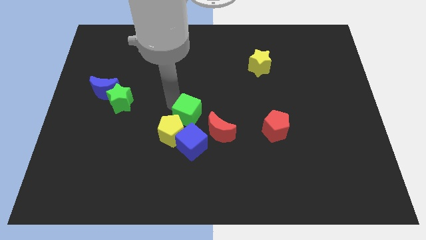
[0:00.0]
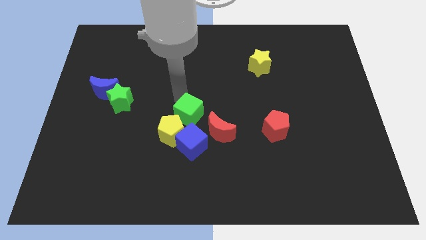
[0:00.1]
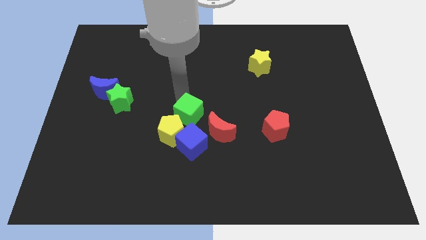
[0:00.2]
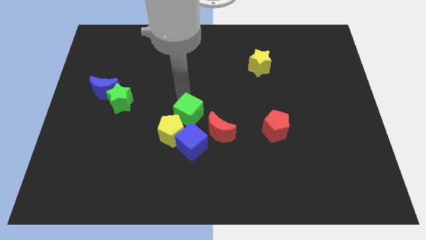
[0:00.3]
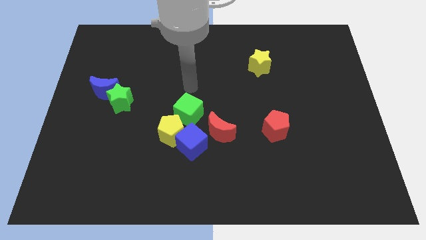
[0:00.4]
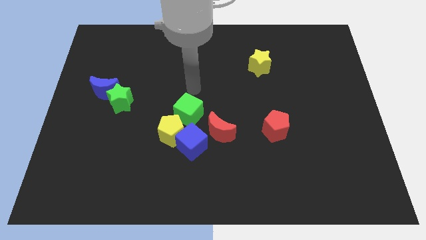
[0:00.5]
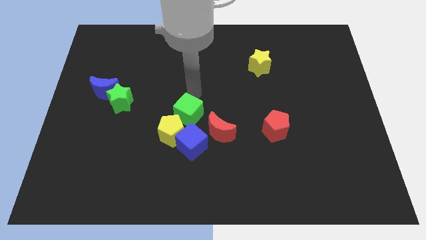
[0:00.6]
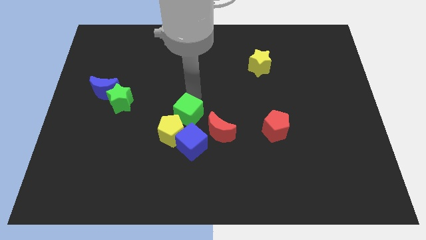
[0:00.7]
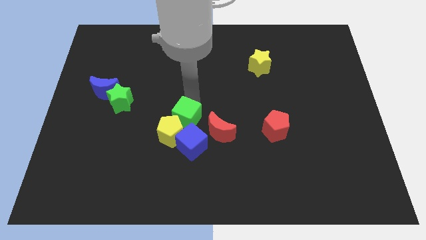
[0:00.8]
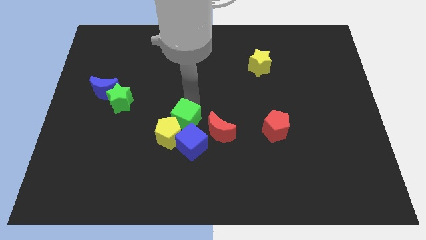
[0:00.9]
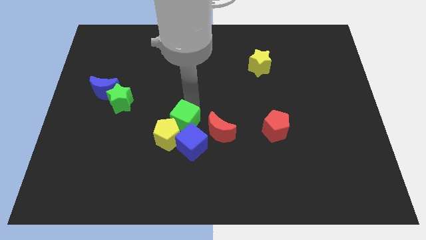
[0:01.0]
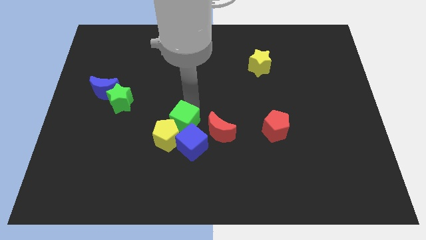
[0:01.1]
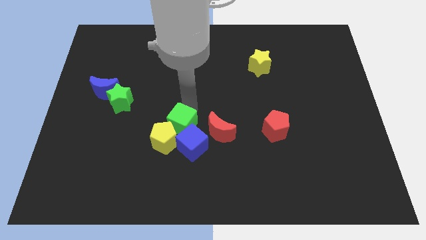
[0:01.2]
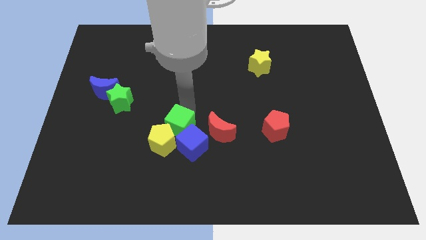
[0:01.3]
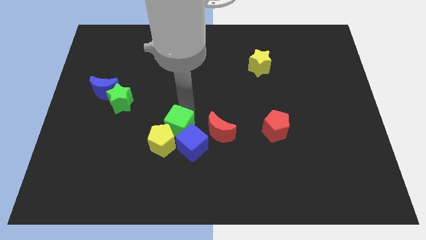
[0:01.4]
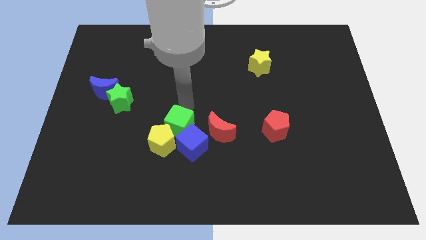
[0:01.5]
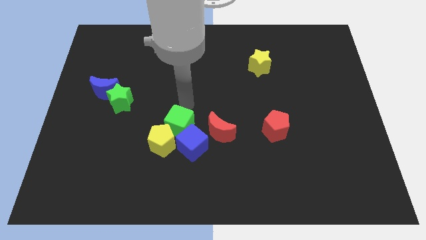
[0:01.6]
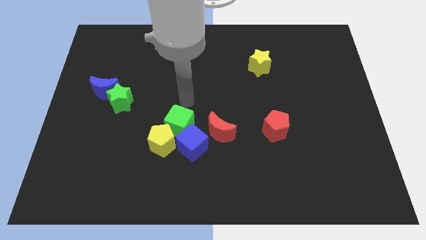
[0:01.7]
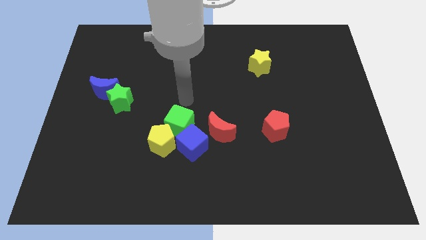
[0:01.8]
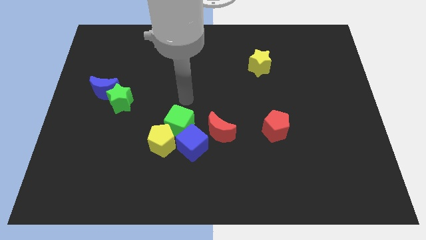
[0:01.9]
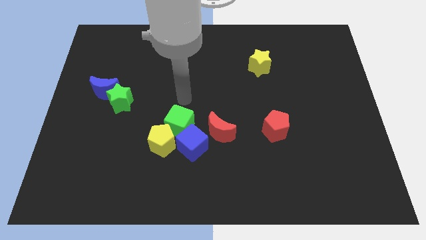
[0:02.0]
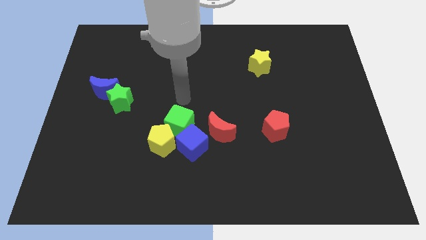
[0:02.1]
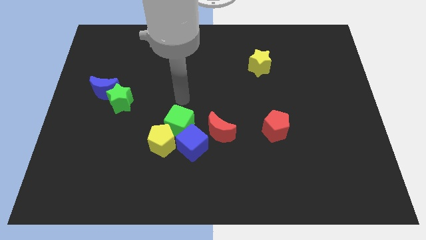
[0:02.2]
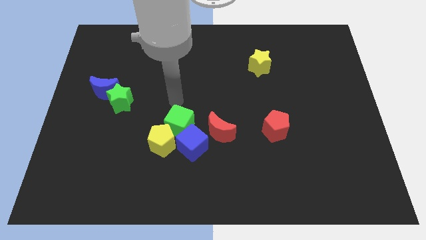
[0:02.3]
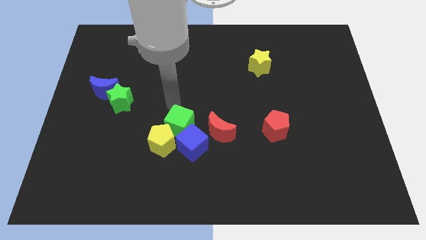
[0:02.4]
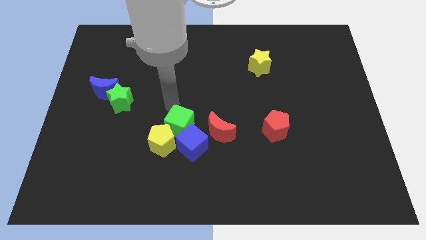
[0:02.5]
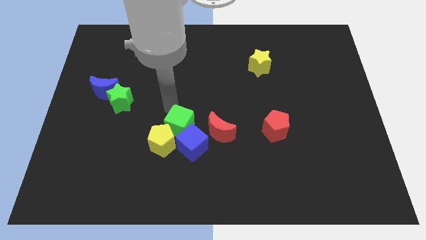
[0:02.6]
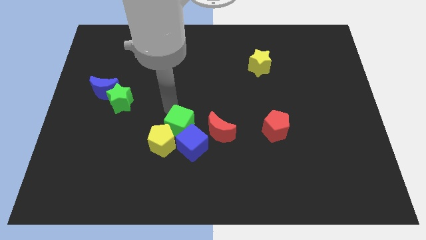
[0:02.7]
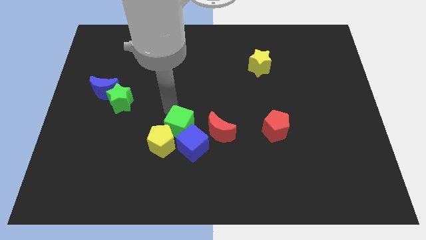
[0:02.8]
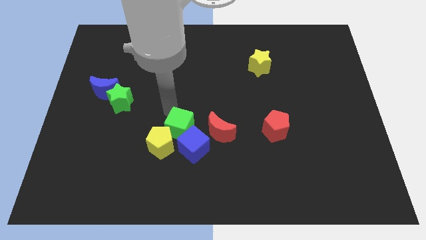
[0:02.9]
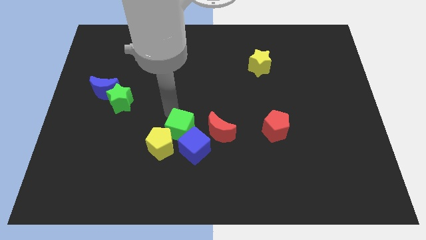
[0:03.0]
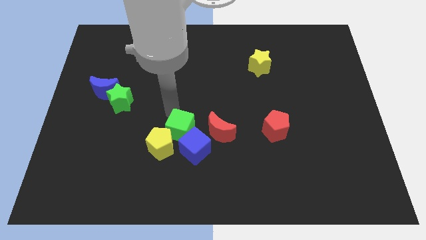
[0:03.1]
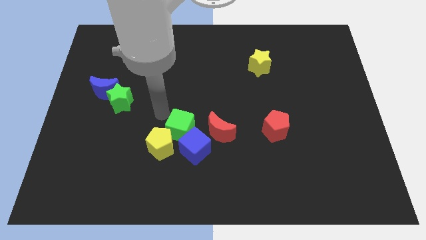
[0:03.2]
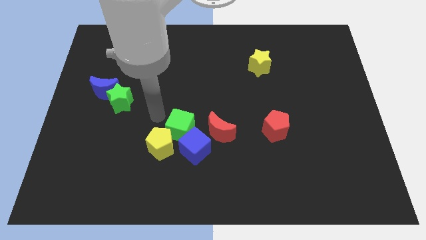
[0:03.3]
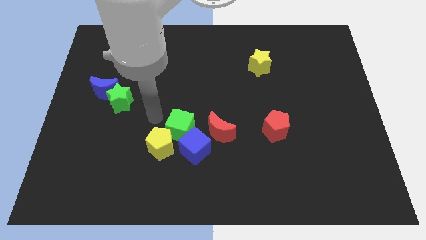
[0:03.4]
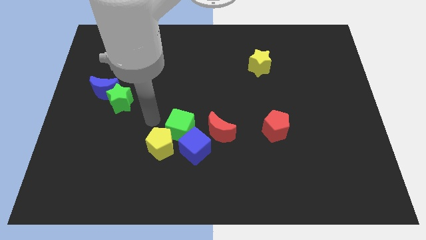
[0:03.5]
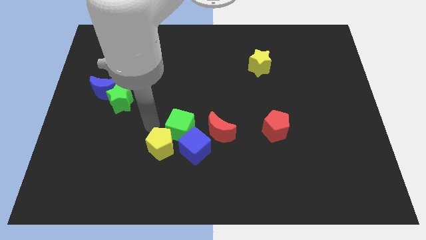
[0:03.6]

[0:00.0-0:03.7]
point your arm above yellow pentagon

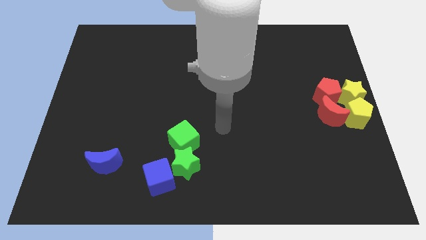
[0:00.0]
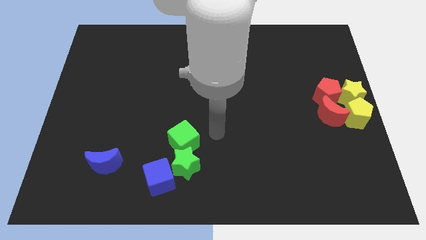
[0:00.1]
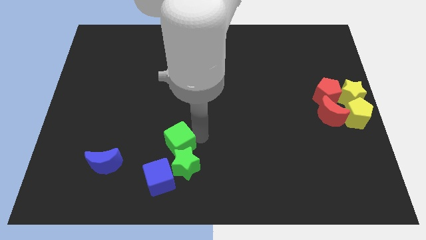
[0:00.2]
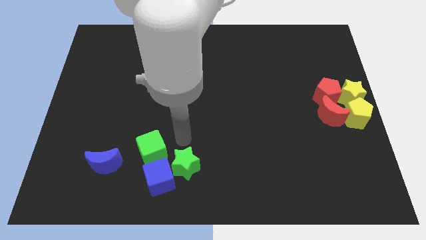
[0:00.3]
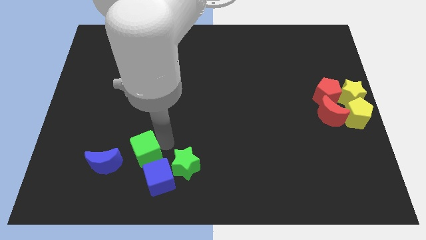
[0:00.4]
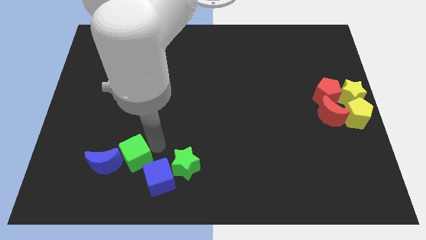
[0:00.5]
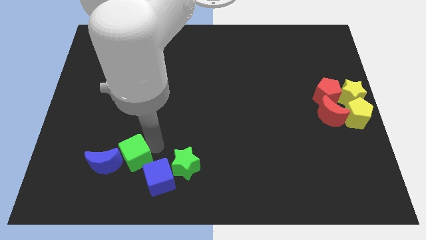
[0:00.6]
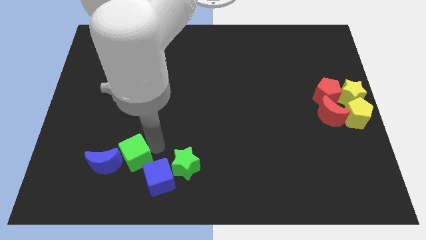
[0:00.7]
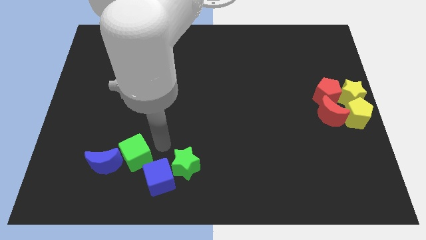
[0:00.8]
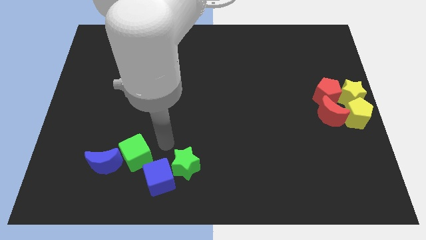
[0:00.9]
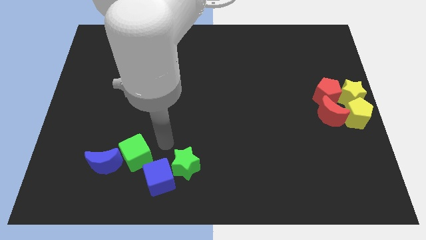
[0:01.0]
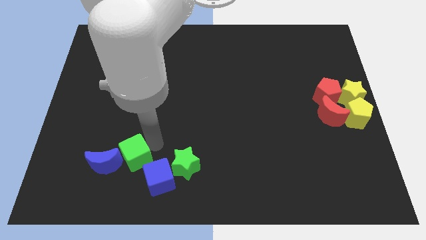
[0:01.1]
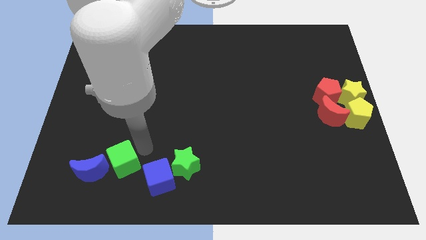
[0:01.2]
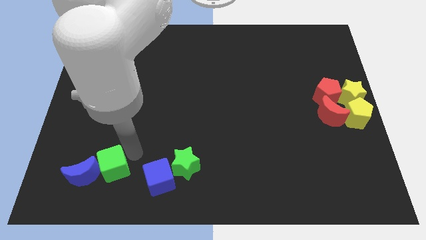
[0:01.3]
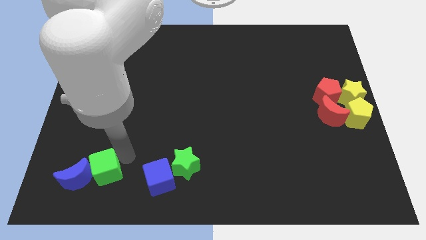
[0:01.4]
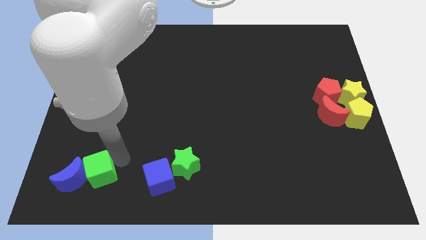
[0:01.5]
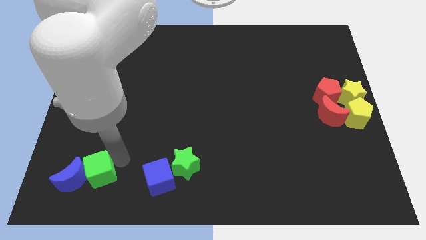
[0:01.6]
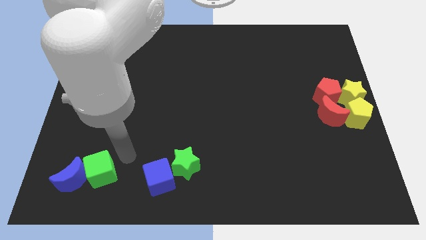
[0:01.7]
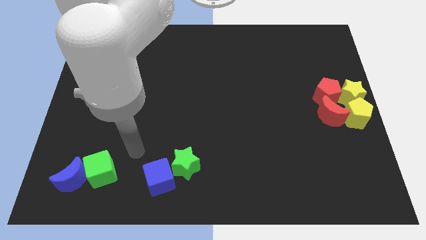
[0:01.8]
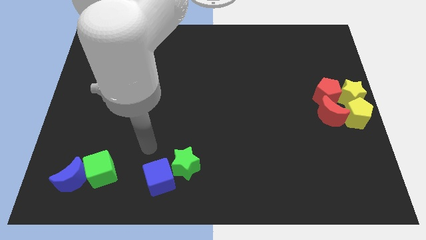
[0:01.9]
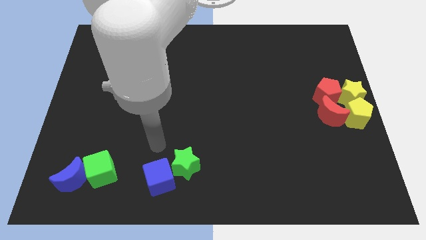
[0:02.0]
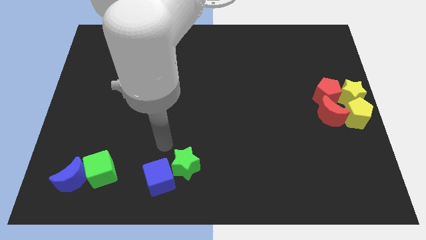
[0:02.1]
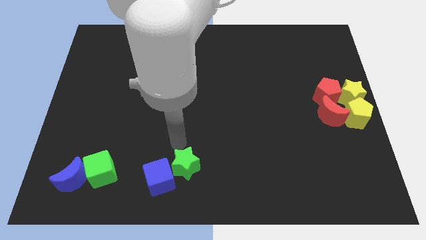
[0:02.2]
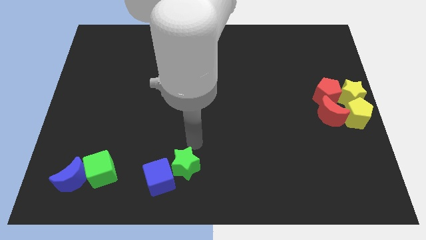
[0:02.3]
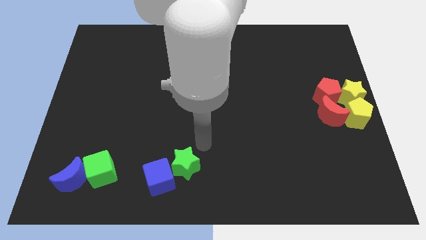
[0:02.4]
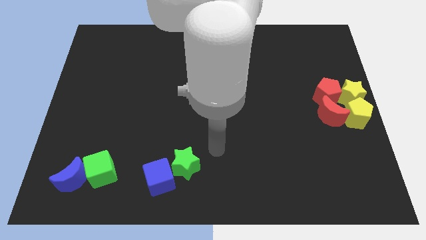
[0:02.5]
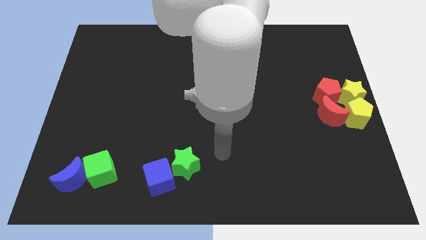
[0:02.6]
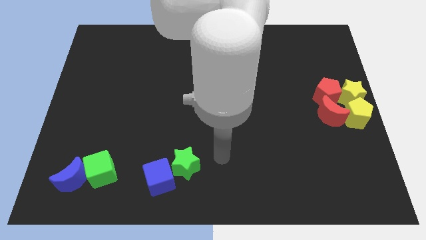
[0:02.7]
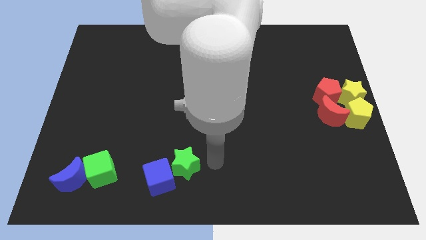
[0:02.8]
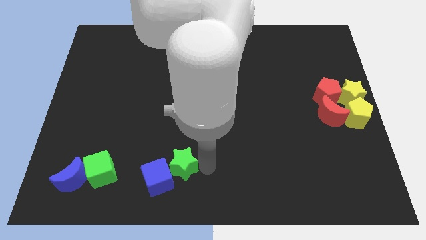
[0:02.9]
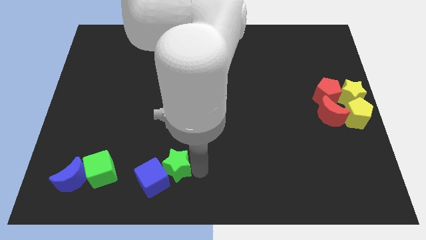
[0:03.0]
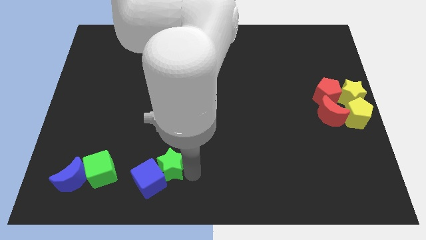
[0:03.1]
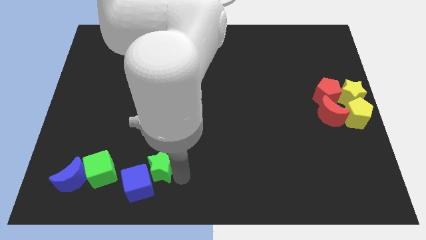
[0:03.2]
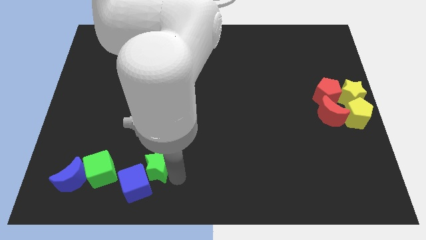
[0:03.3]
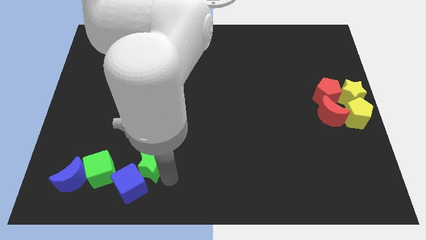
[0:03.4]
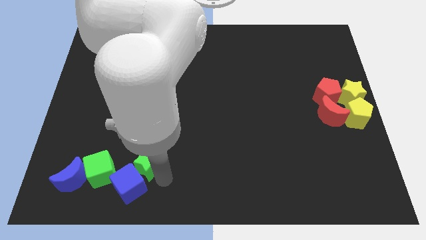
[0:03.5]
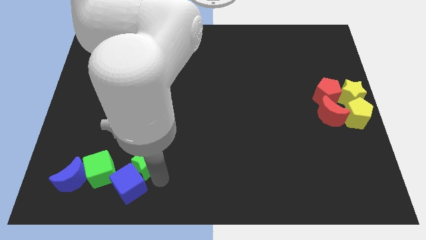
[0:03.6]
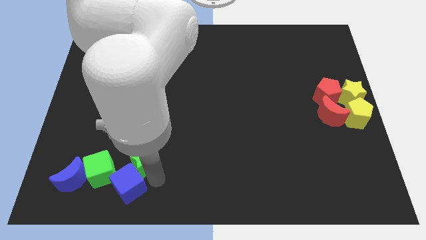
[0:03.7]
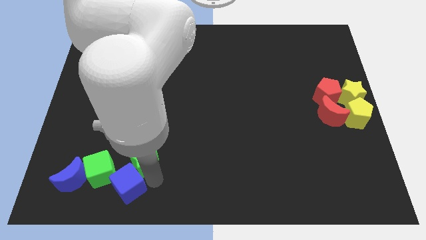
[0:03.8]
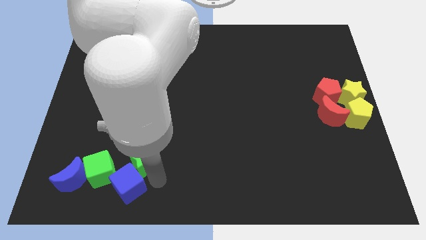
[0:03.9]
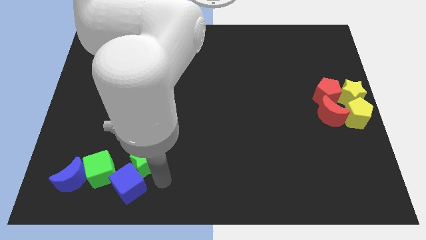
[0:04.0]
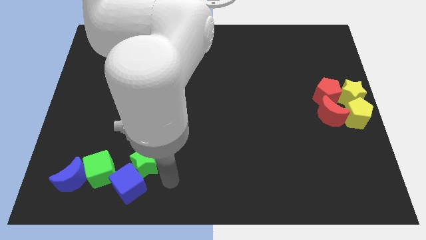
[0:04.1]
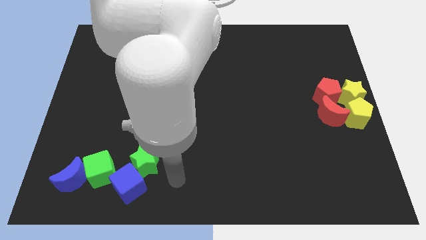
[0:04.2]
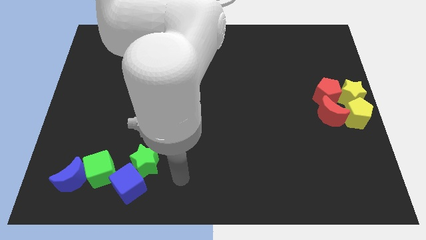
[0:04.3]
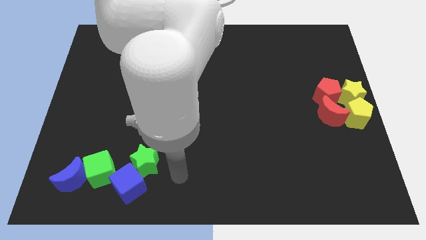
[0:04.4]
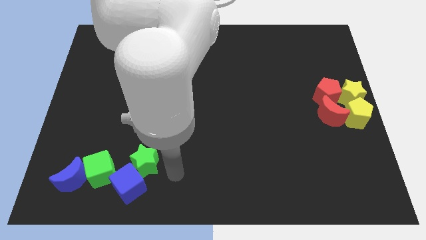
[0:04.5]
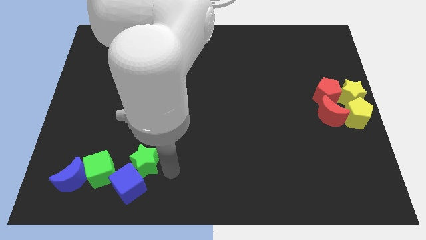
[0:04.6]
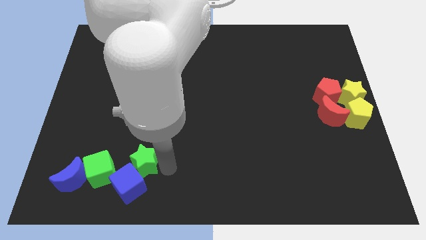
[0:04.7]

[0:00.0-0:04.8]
move green cube and blue moon to the bottom left

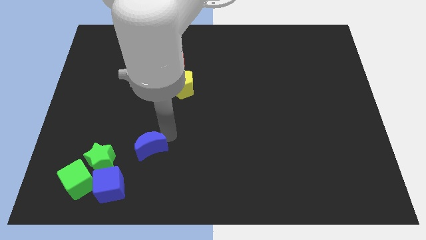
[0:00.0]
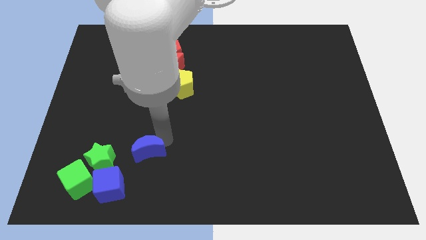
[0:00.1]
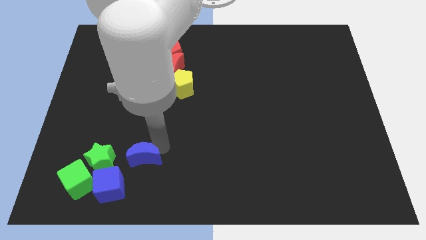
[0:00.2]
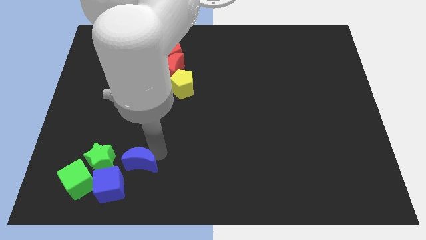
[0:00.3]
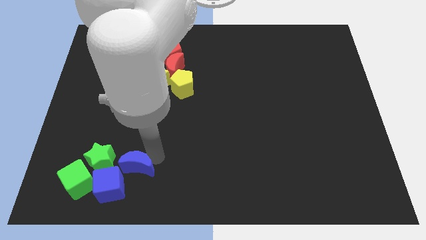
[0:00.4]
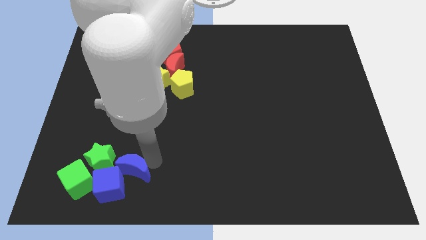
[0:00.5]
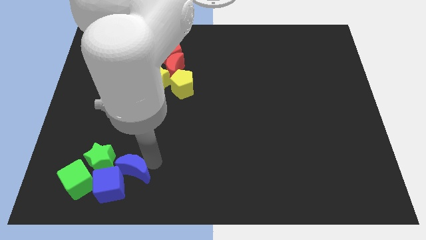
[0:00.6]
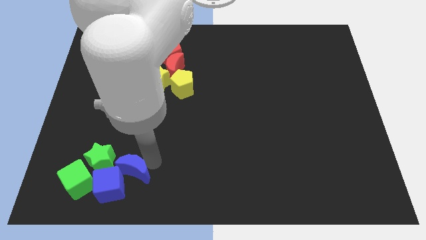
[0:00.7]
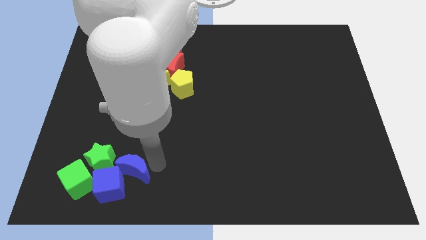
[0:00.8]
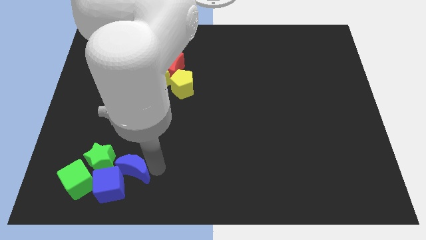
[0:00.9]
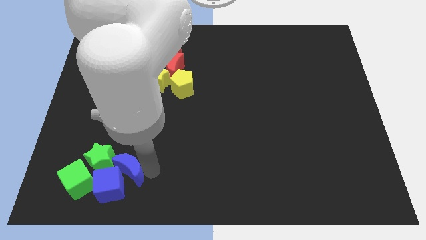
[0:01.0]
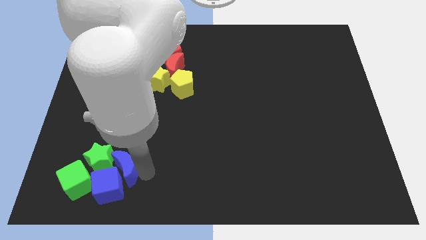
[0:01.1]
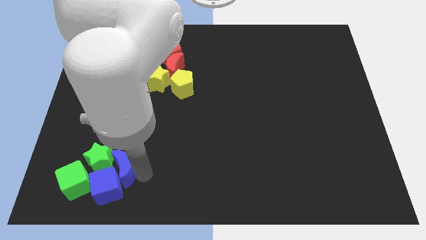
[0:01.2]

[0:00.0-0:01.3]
push blue crescent into the group of blocks
